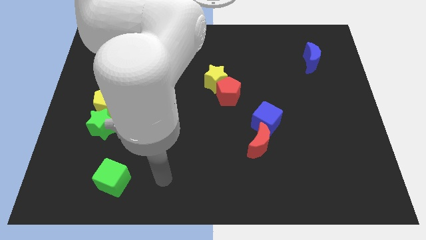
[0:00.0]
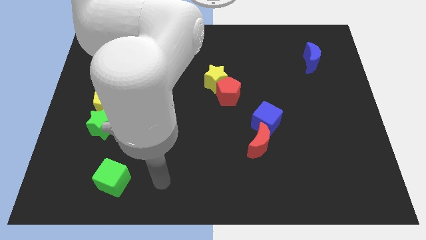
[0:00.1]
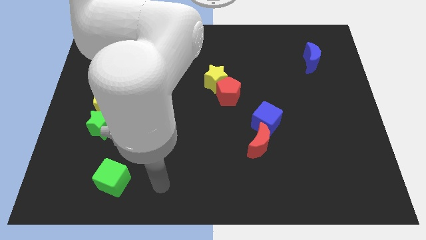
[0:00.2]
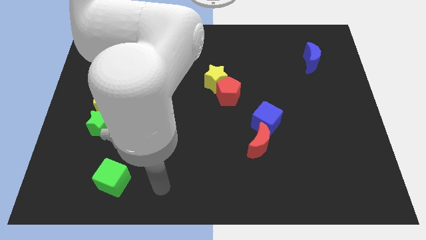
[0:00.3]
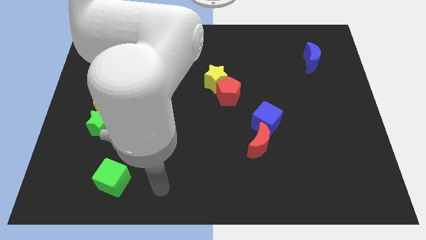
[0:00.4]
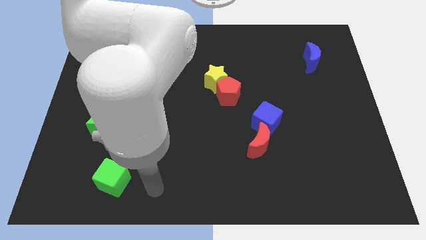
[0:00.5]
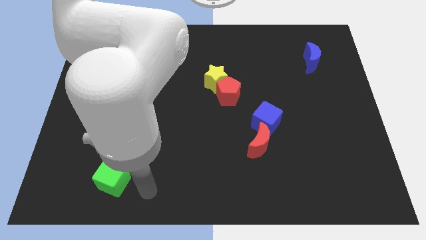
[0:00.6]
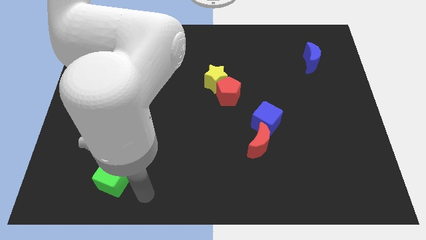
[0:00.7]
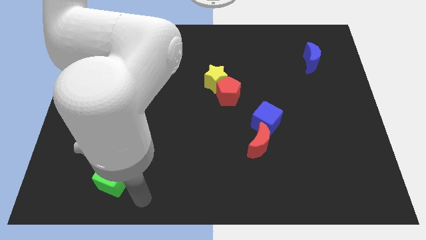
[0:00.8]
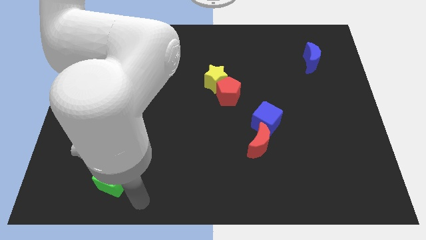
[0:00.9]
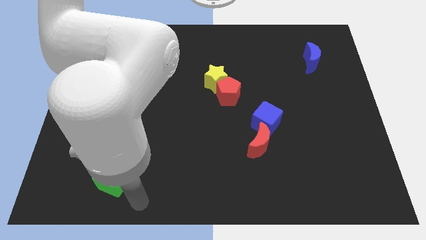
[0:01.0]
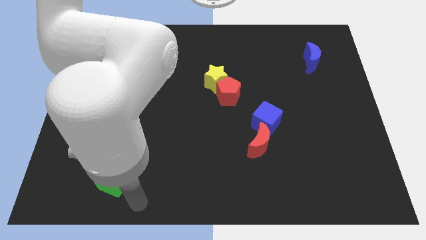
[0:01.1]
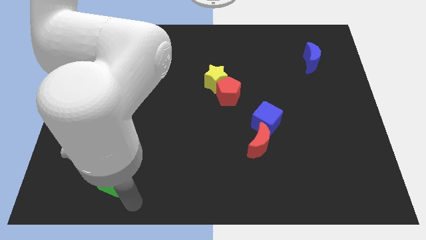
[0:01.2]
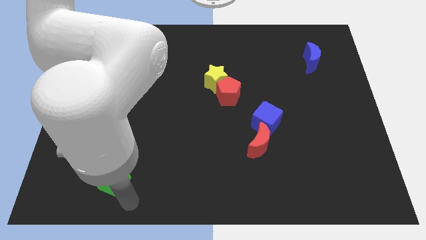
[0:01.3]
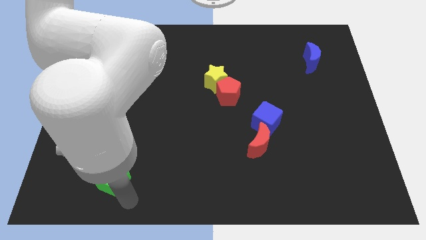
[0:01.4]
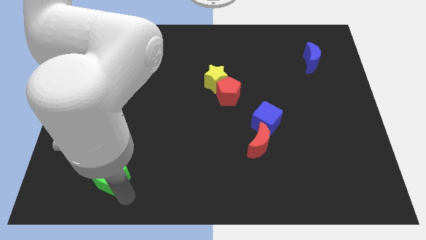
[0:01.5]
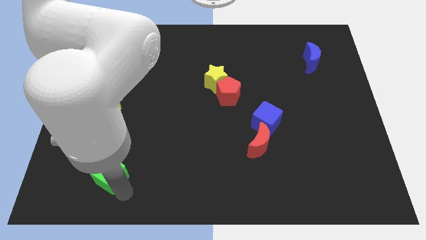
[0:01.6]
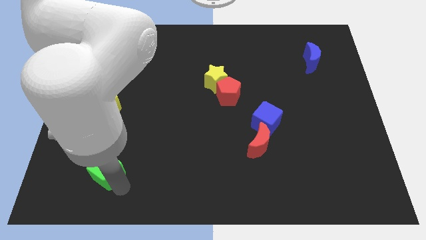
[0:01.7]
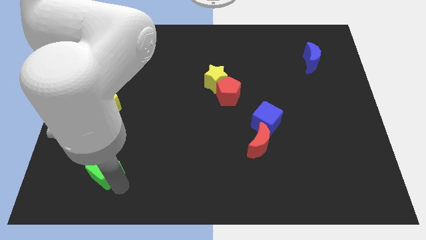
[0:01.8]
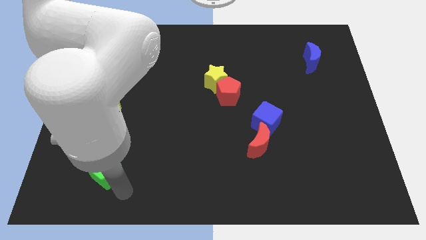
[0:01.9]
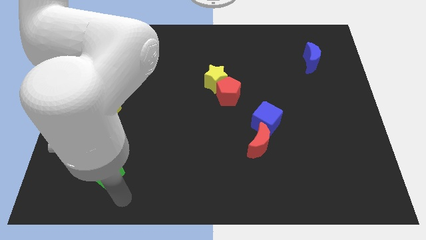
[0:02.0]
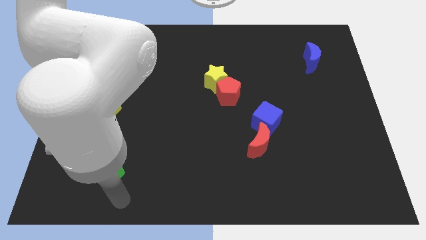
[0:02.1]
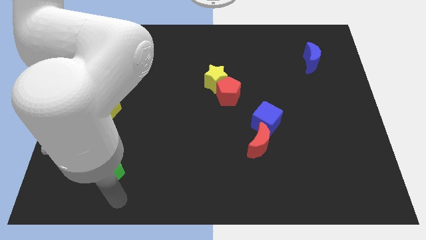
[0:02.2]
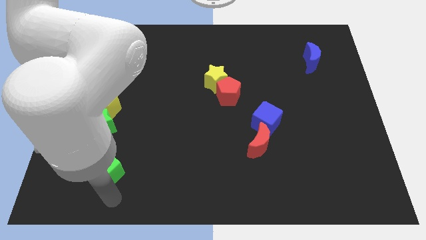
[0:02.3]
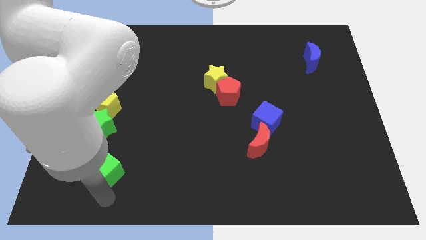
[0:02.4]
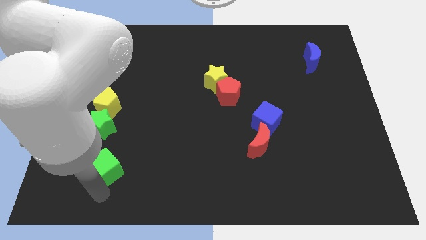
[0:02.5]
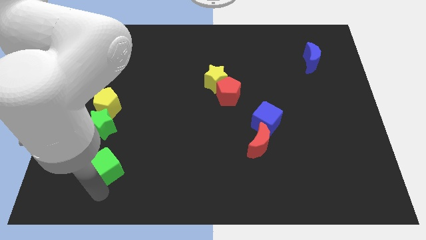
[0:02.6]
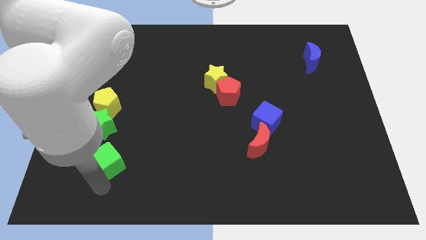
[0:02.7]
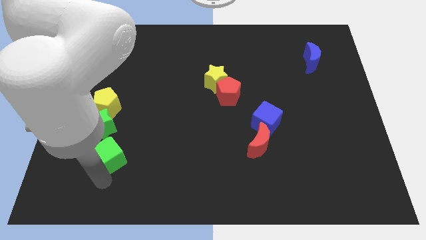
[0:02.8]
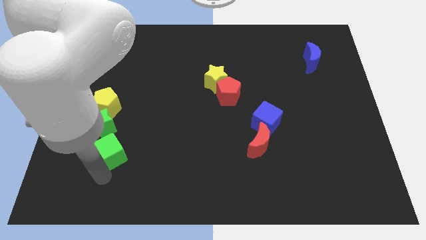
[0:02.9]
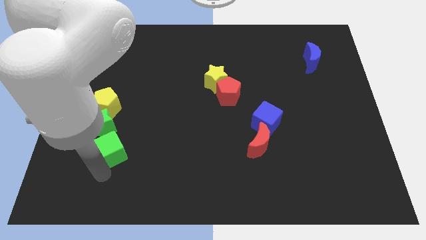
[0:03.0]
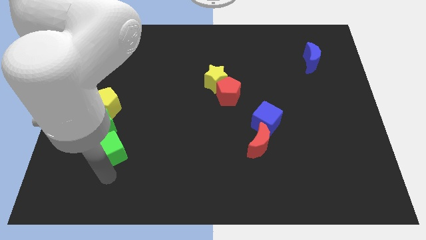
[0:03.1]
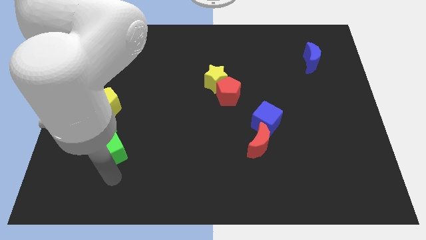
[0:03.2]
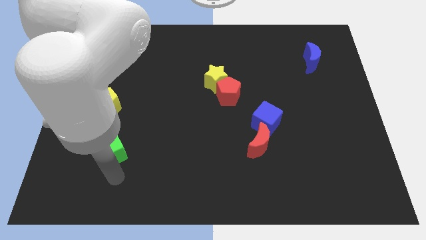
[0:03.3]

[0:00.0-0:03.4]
push the green cube slightly upwards

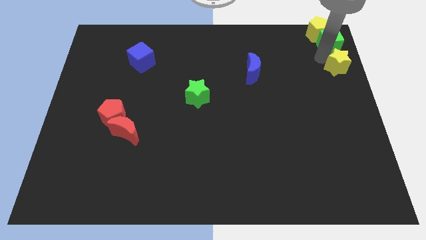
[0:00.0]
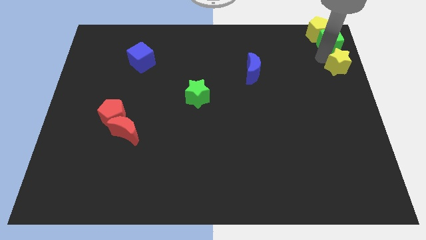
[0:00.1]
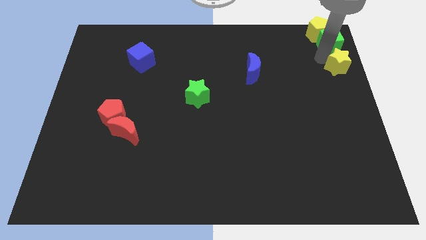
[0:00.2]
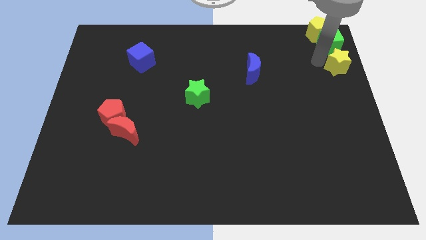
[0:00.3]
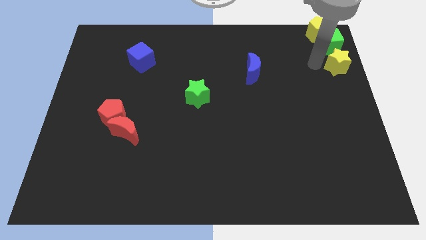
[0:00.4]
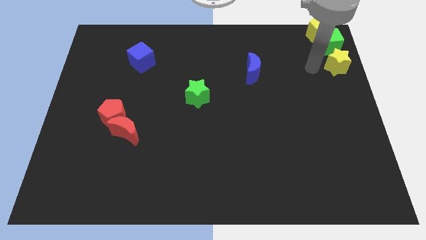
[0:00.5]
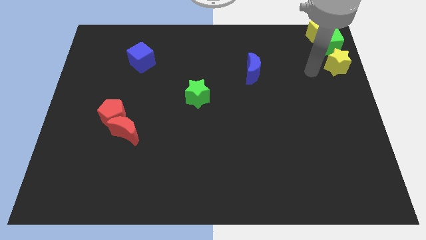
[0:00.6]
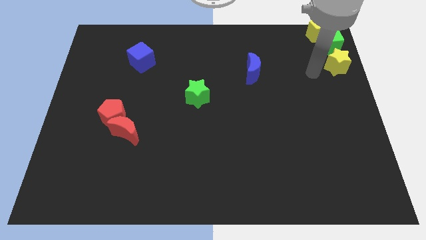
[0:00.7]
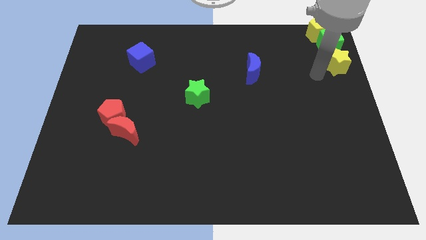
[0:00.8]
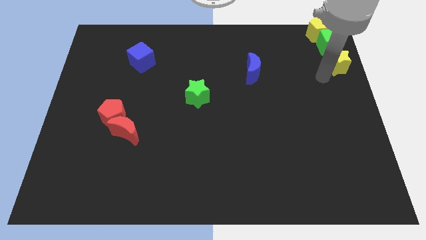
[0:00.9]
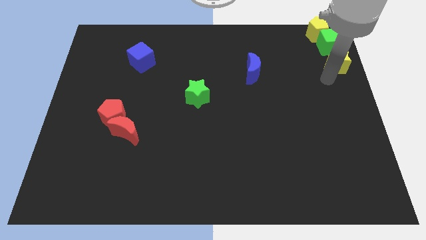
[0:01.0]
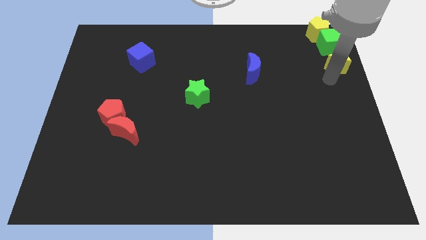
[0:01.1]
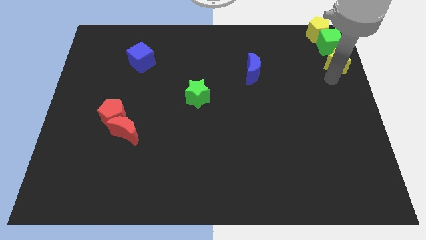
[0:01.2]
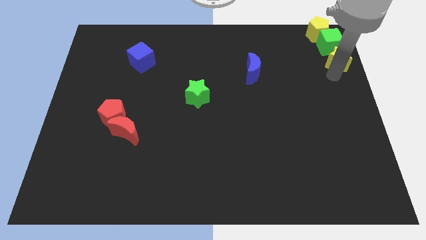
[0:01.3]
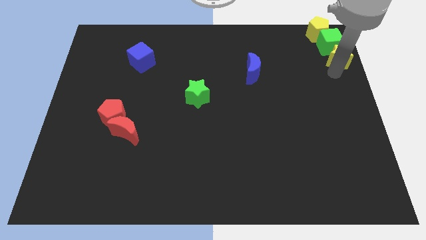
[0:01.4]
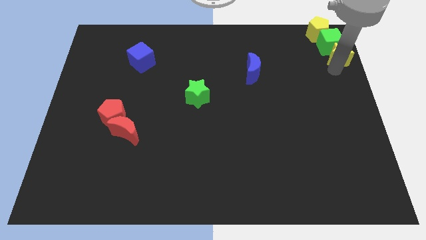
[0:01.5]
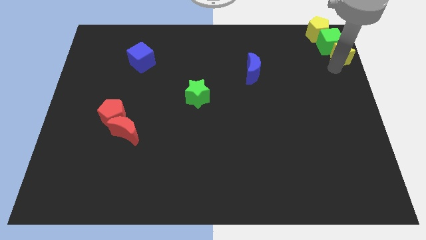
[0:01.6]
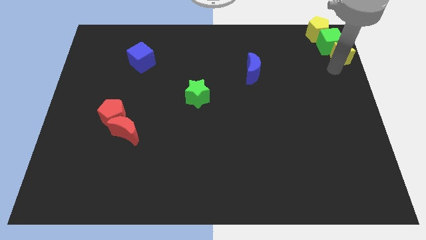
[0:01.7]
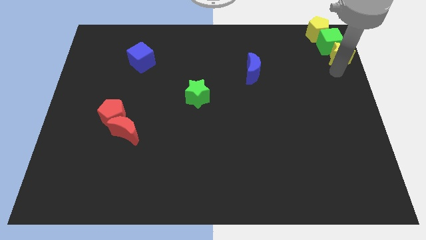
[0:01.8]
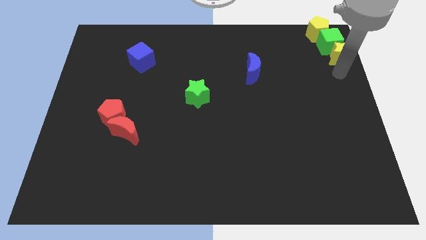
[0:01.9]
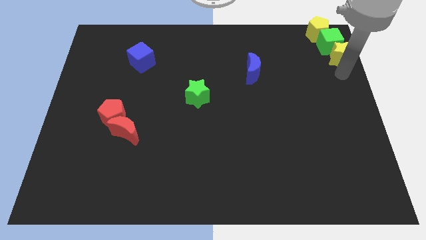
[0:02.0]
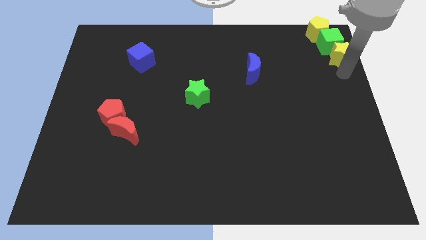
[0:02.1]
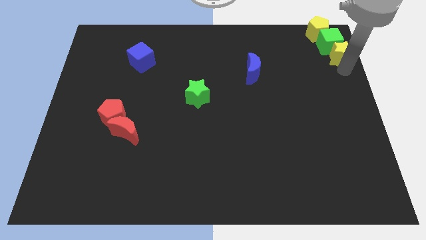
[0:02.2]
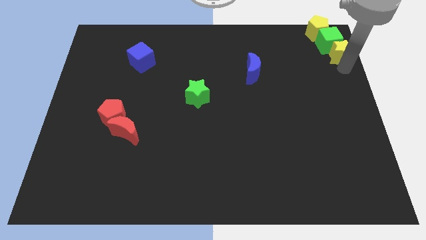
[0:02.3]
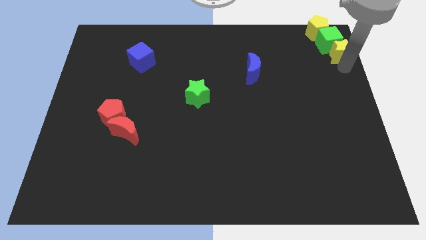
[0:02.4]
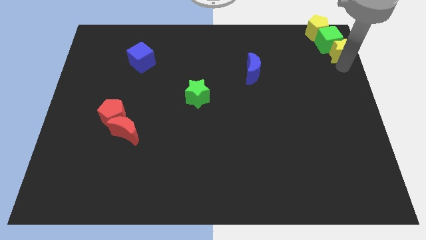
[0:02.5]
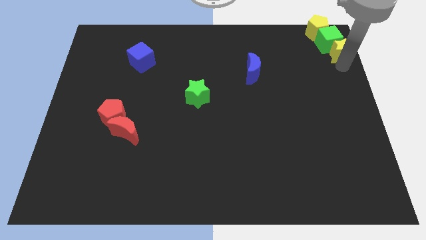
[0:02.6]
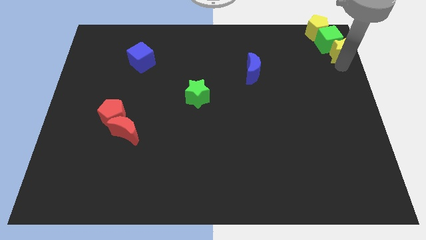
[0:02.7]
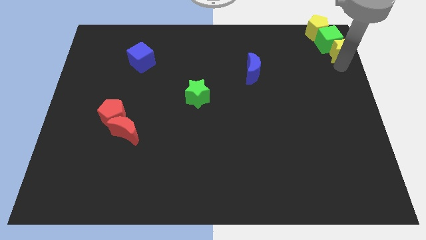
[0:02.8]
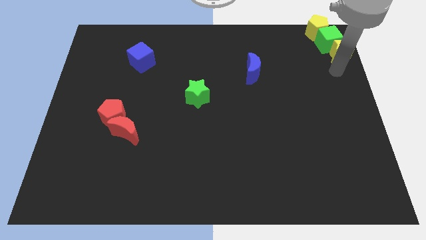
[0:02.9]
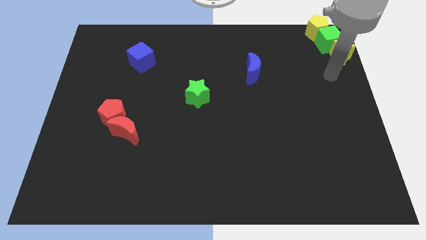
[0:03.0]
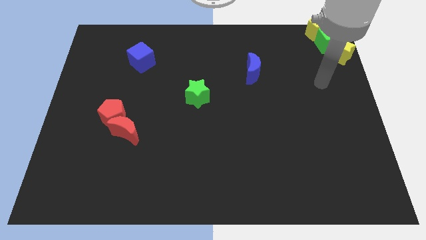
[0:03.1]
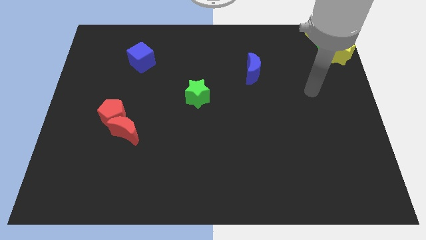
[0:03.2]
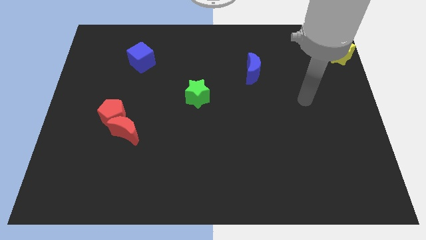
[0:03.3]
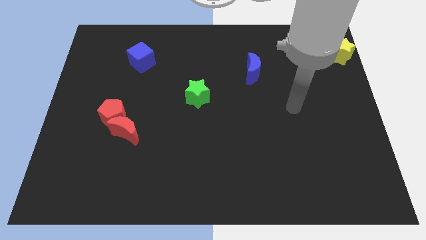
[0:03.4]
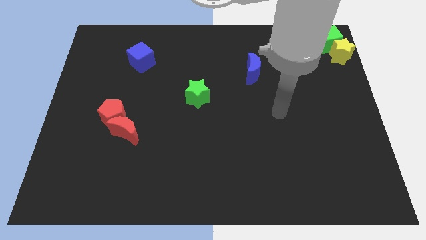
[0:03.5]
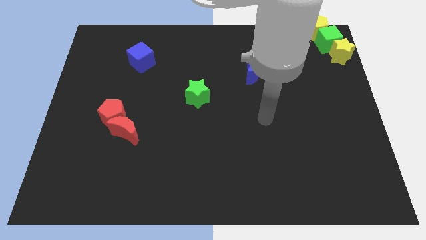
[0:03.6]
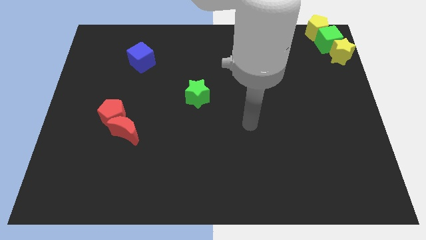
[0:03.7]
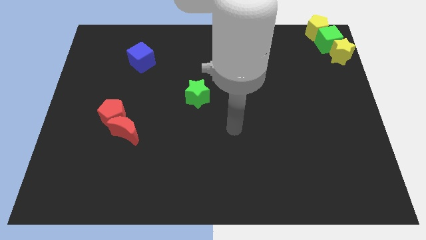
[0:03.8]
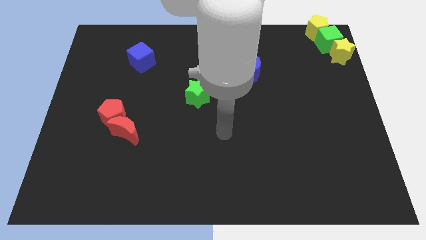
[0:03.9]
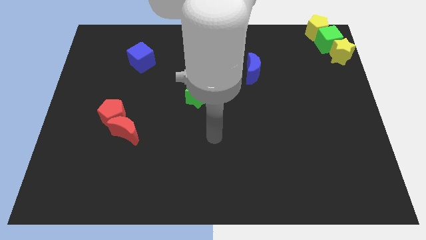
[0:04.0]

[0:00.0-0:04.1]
move yellow star into the green cube

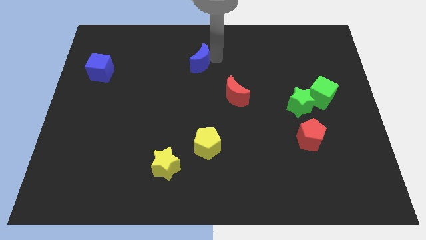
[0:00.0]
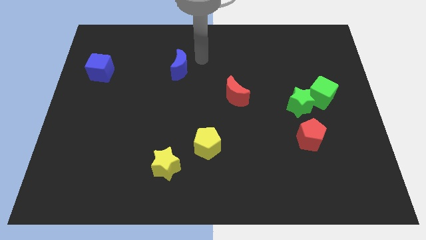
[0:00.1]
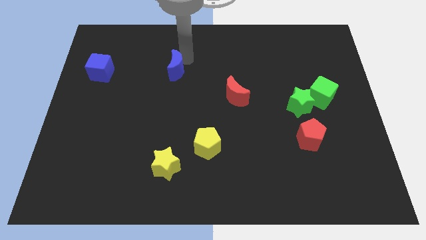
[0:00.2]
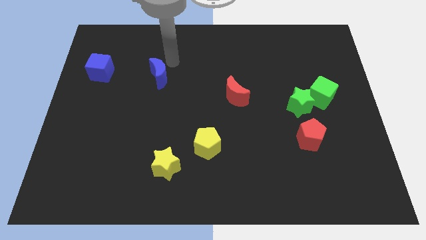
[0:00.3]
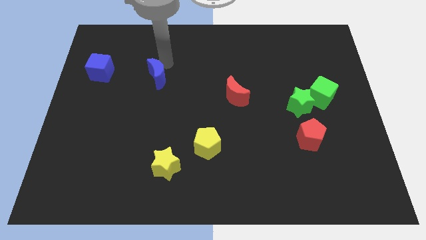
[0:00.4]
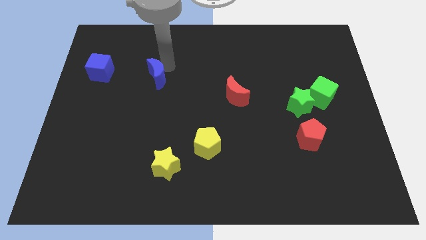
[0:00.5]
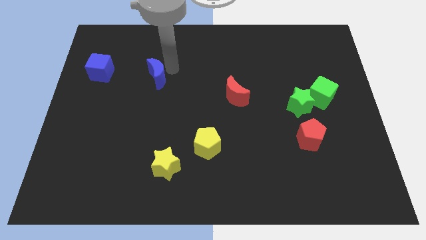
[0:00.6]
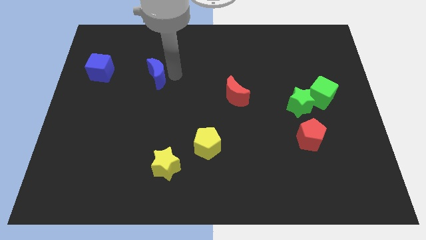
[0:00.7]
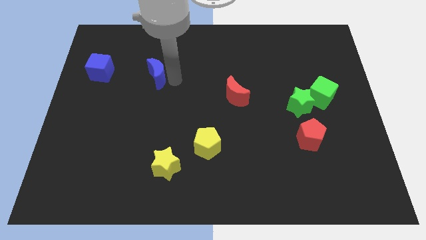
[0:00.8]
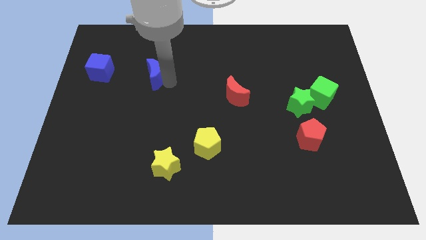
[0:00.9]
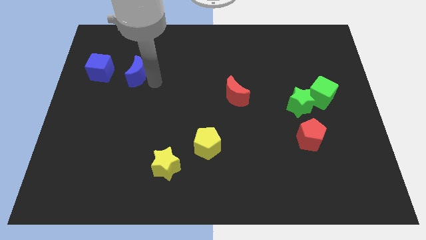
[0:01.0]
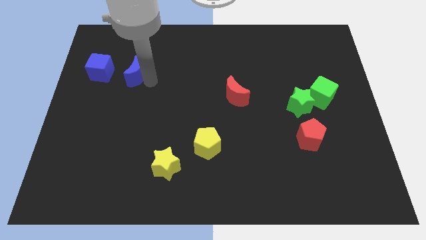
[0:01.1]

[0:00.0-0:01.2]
place the blue moon right of blue cube

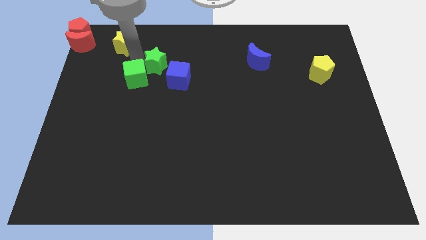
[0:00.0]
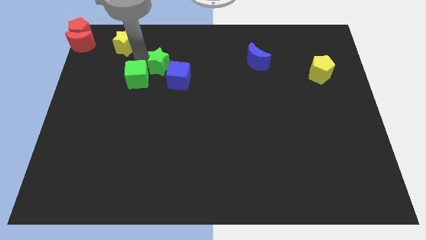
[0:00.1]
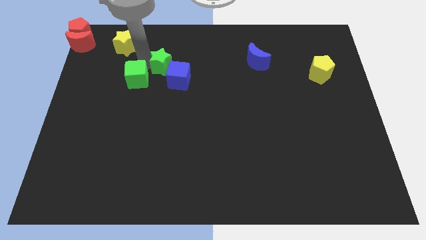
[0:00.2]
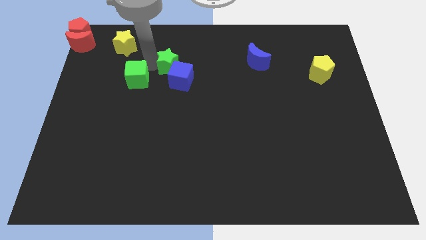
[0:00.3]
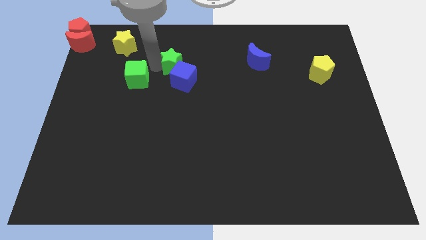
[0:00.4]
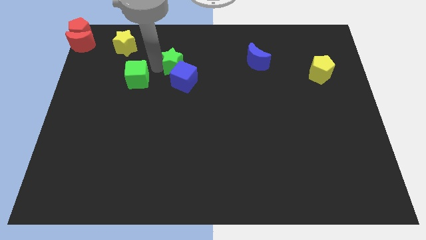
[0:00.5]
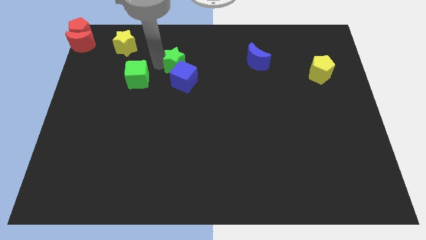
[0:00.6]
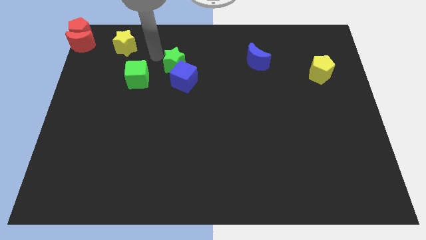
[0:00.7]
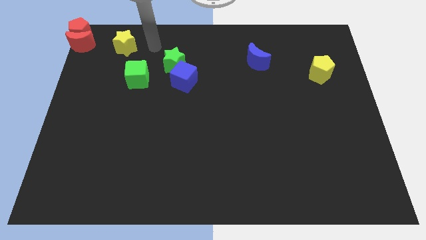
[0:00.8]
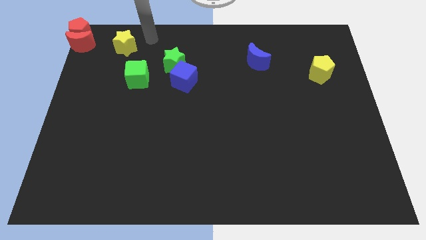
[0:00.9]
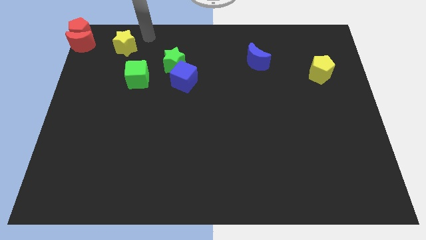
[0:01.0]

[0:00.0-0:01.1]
push the green star to the top left of the blue cube
